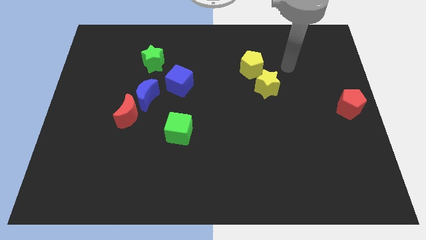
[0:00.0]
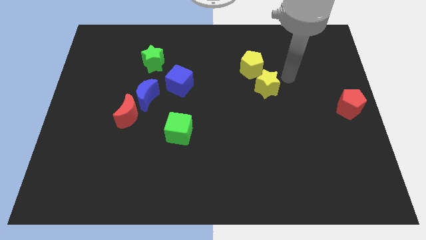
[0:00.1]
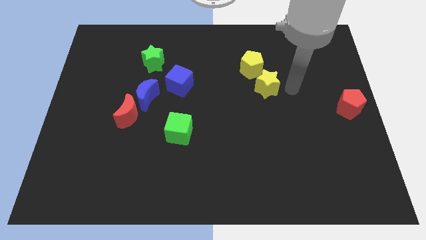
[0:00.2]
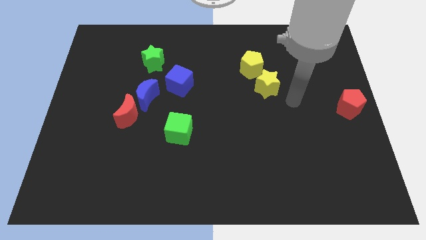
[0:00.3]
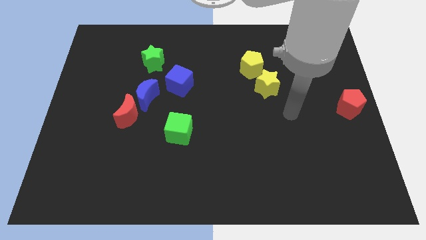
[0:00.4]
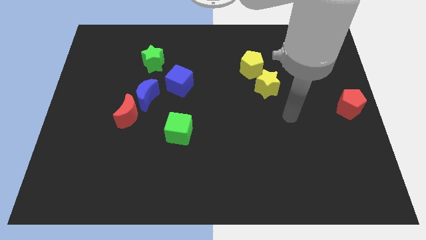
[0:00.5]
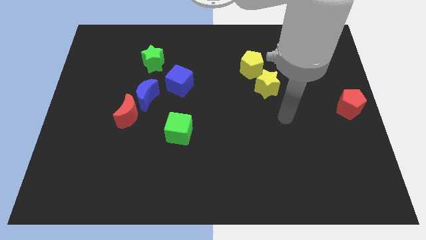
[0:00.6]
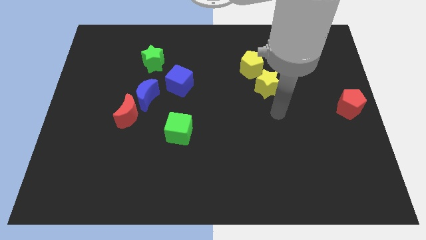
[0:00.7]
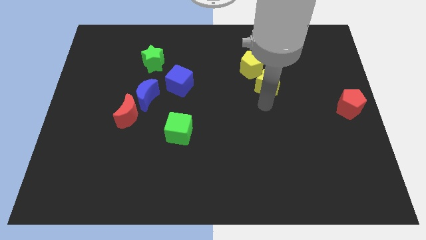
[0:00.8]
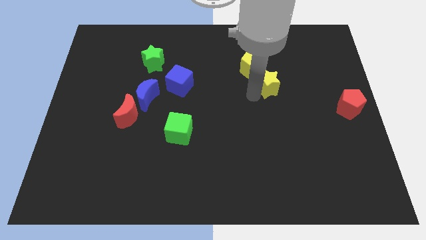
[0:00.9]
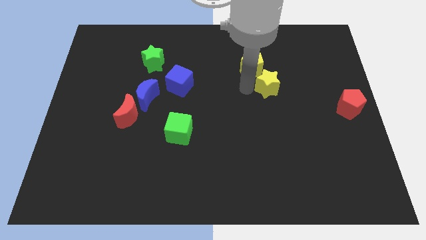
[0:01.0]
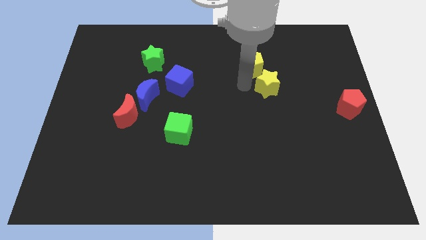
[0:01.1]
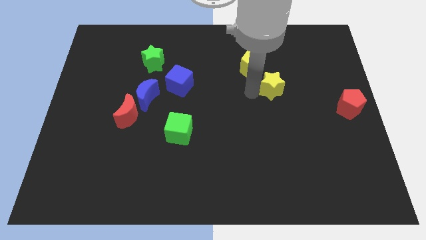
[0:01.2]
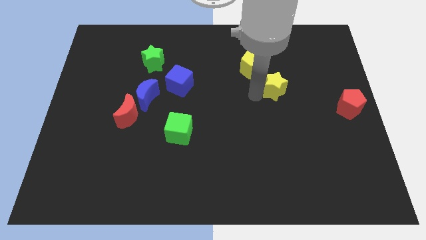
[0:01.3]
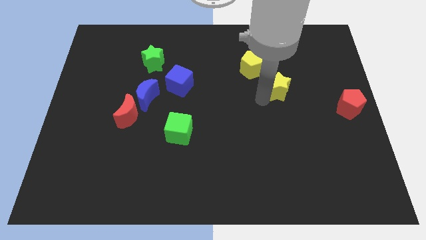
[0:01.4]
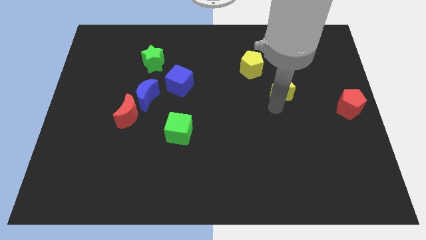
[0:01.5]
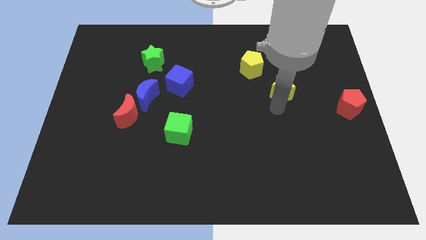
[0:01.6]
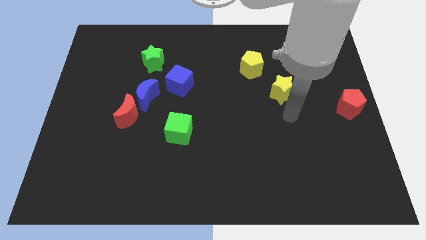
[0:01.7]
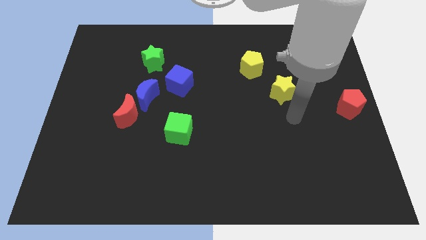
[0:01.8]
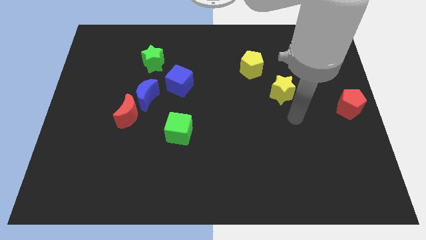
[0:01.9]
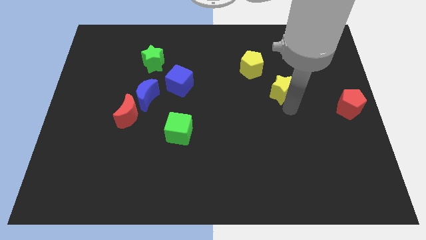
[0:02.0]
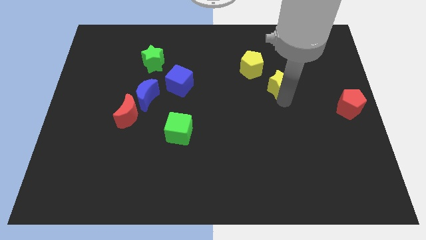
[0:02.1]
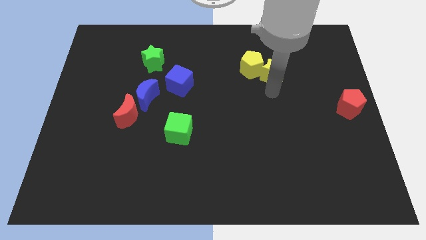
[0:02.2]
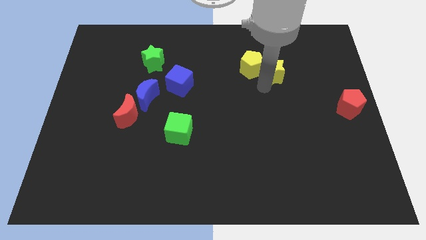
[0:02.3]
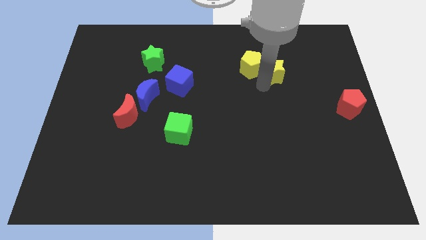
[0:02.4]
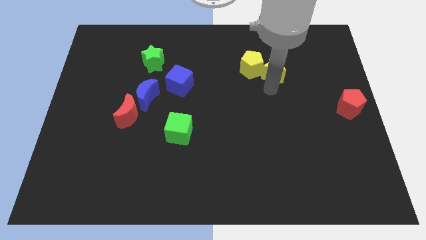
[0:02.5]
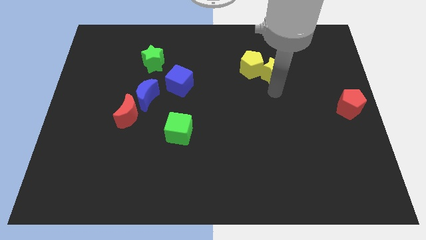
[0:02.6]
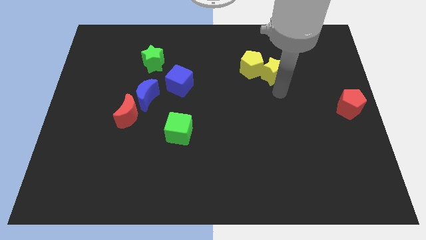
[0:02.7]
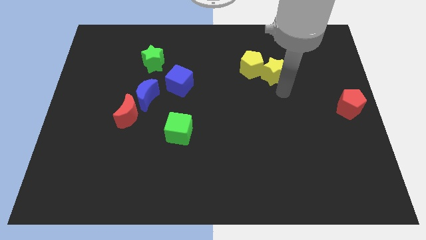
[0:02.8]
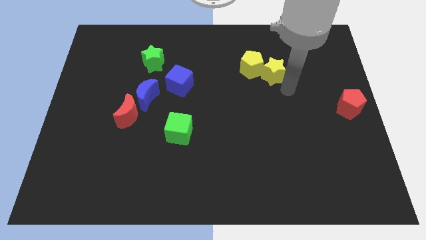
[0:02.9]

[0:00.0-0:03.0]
push the yellow star into the yellow pentagon

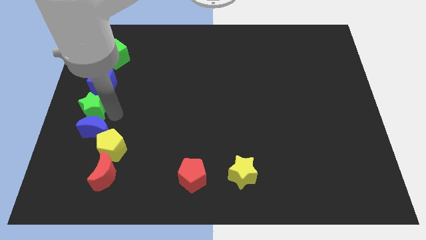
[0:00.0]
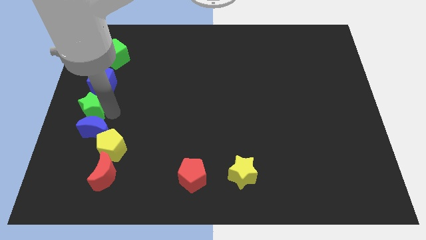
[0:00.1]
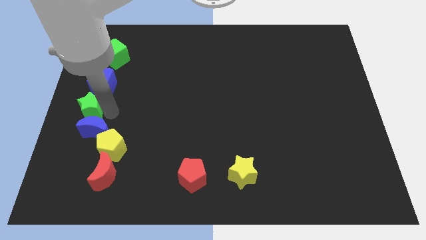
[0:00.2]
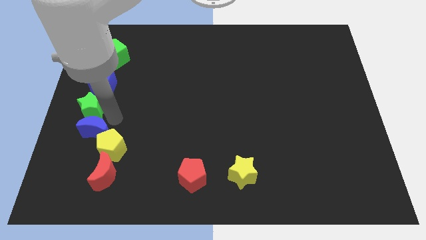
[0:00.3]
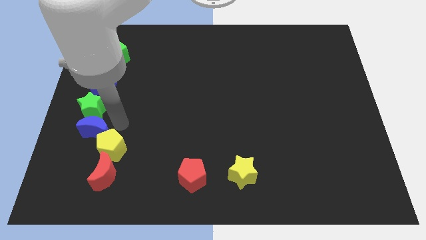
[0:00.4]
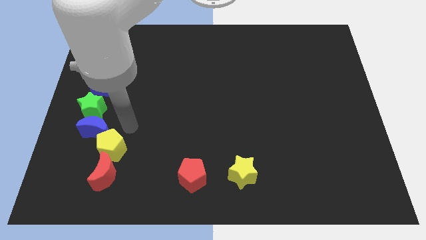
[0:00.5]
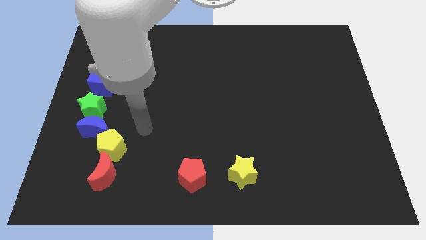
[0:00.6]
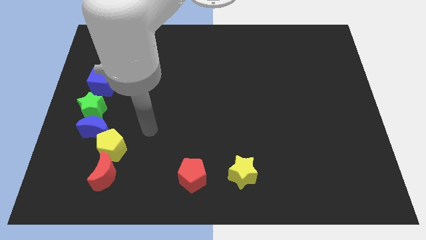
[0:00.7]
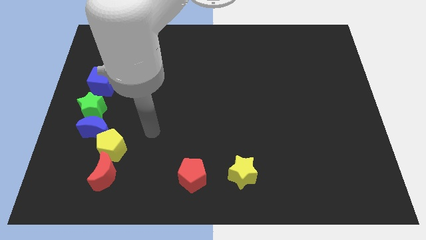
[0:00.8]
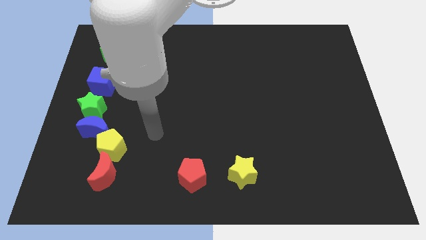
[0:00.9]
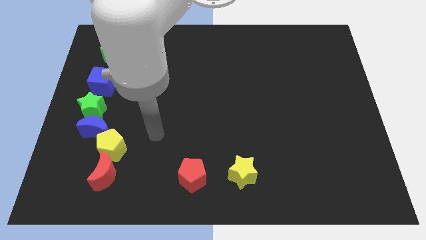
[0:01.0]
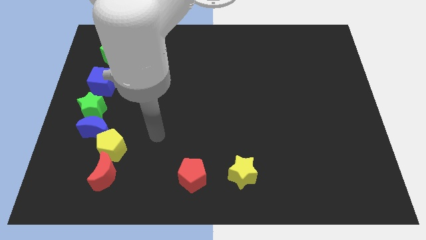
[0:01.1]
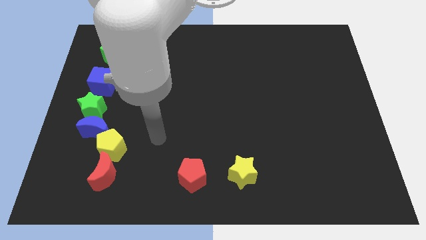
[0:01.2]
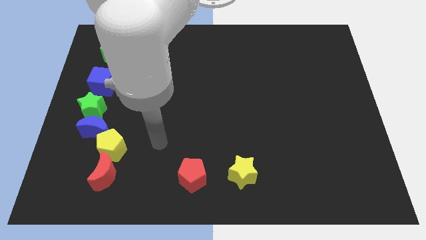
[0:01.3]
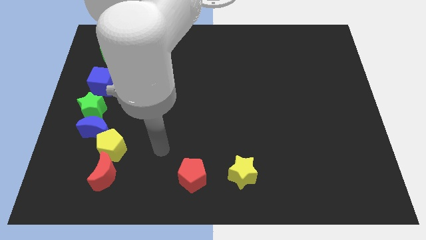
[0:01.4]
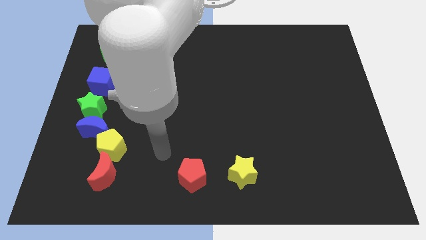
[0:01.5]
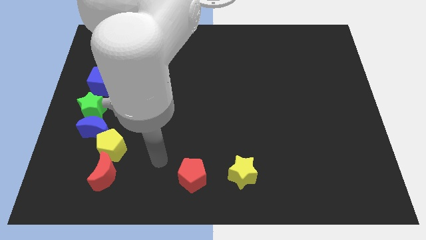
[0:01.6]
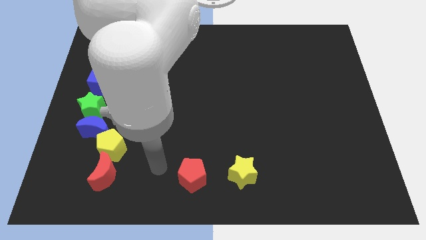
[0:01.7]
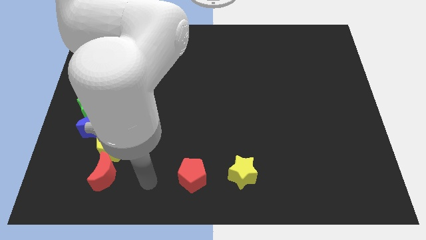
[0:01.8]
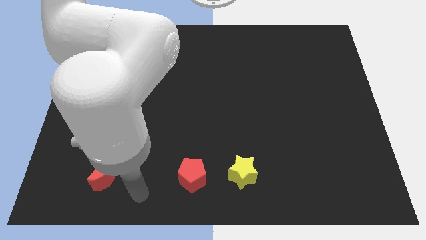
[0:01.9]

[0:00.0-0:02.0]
place your arm in between the red moon and the red pentagon

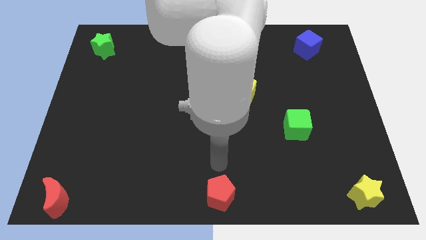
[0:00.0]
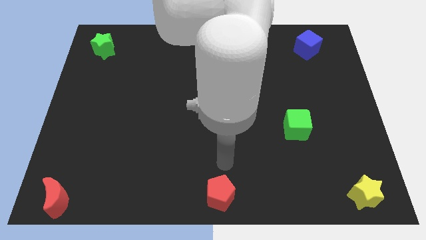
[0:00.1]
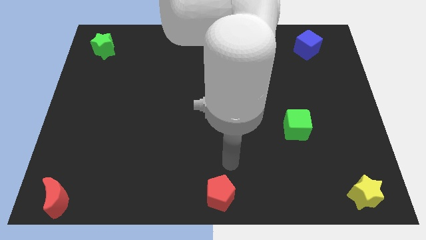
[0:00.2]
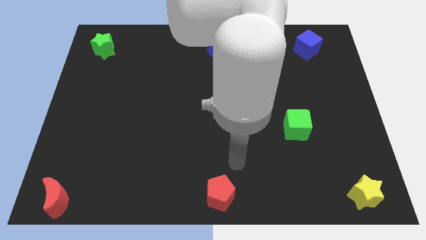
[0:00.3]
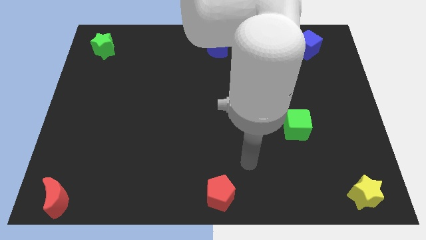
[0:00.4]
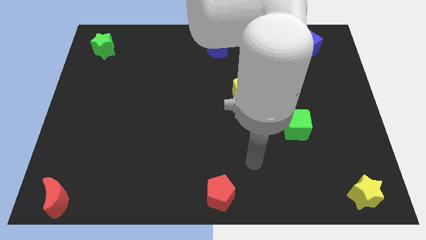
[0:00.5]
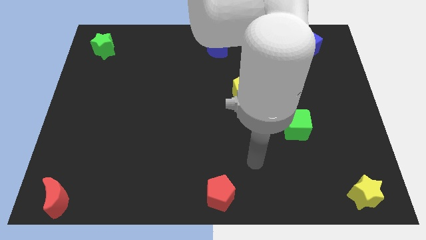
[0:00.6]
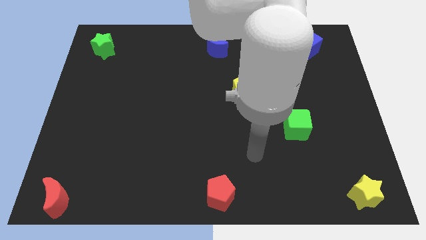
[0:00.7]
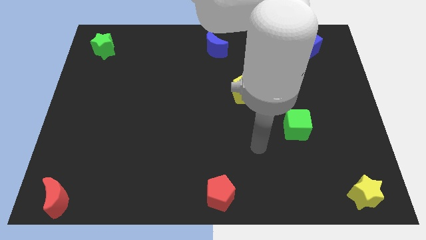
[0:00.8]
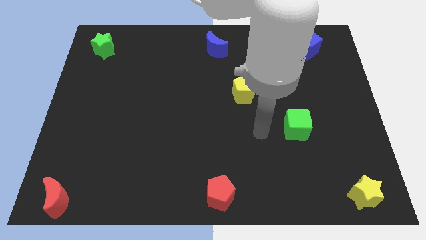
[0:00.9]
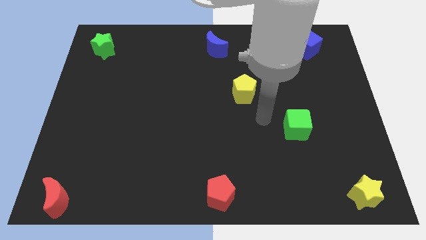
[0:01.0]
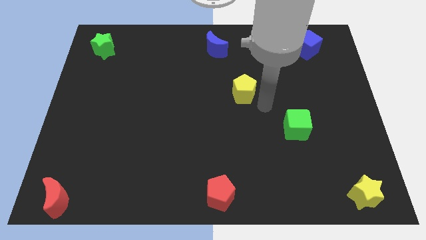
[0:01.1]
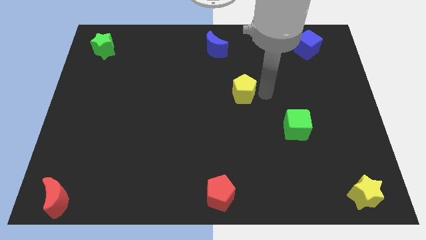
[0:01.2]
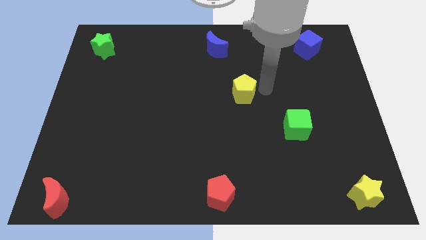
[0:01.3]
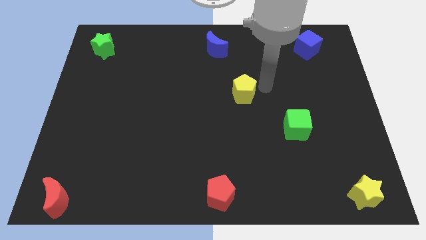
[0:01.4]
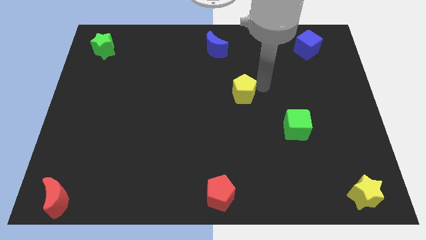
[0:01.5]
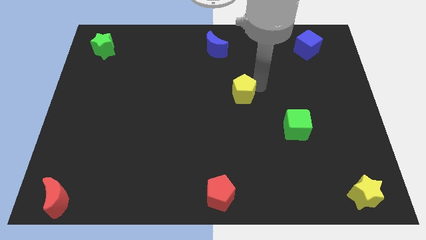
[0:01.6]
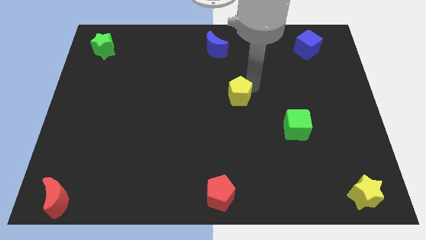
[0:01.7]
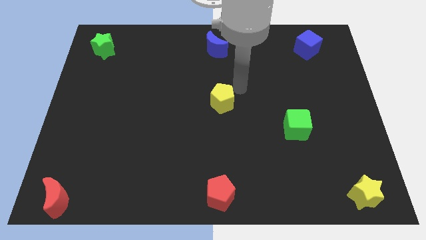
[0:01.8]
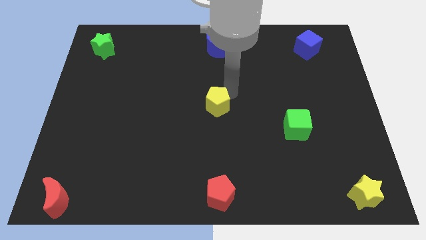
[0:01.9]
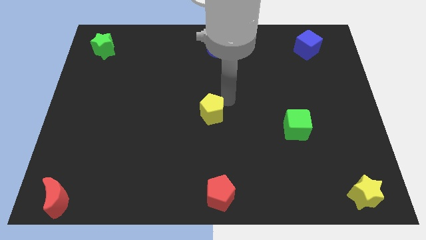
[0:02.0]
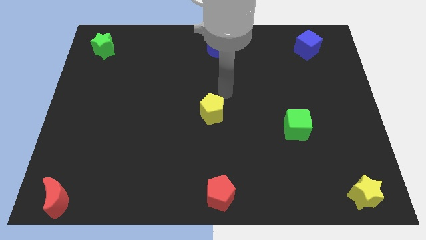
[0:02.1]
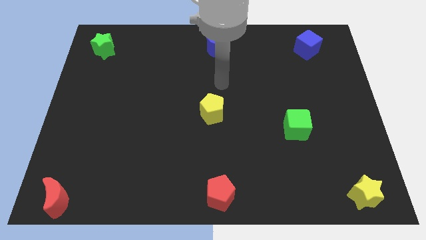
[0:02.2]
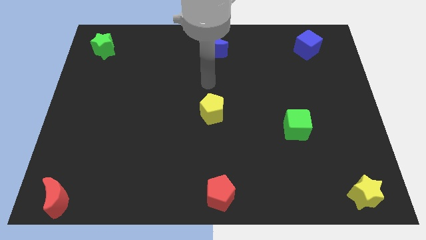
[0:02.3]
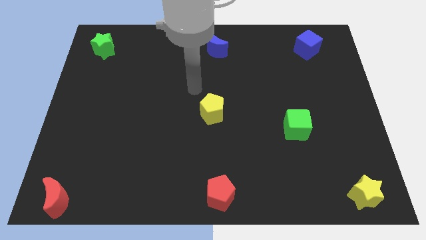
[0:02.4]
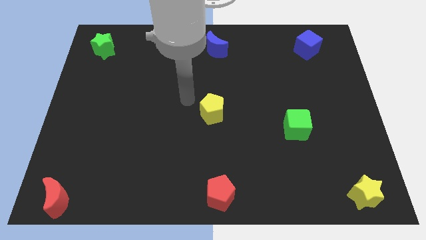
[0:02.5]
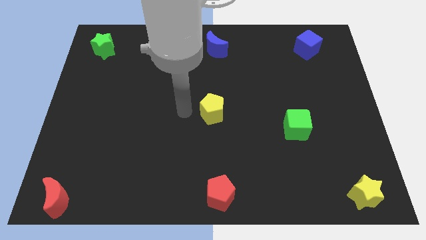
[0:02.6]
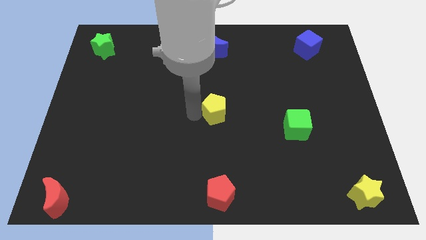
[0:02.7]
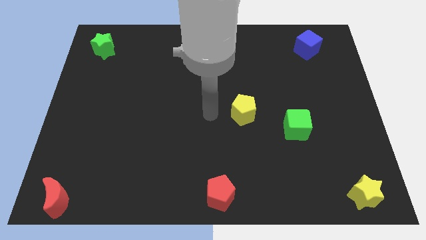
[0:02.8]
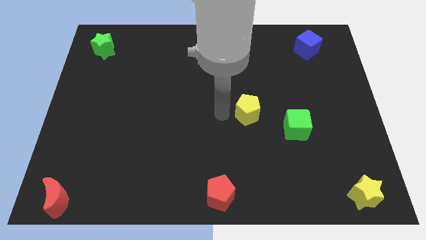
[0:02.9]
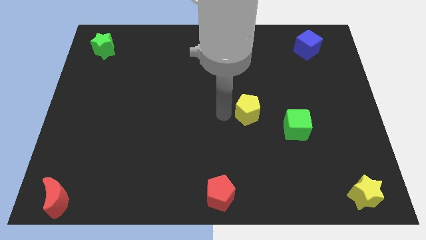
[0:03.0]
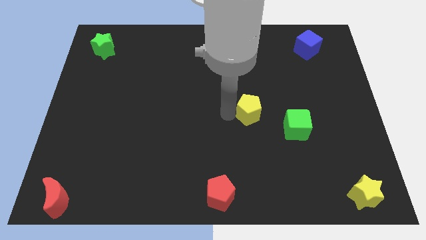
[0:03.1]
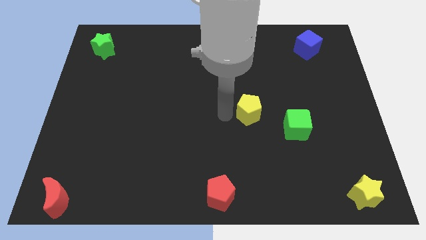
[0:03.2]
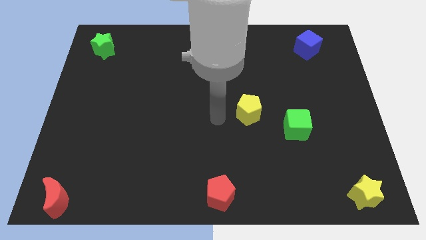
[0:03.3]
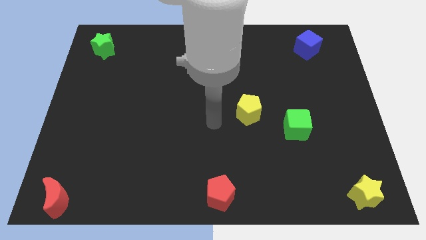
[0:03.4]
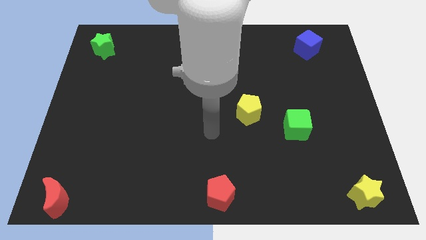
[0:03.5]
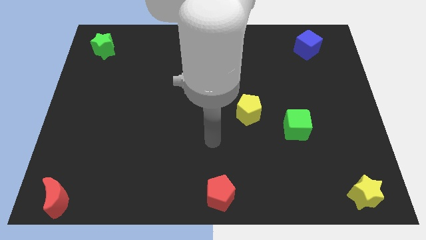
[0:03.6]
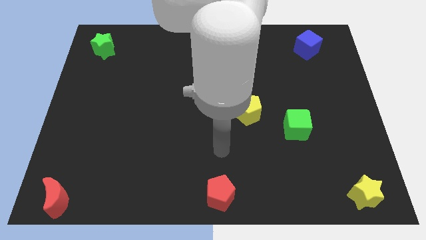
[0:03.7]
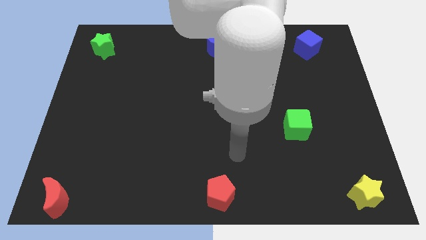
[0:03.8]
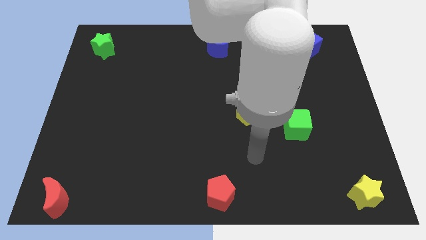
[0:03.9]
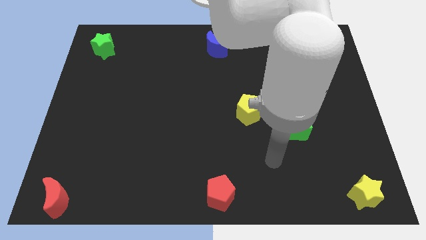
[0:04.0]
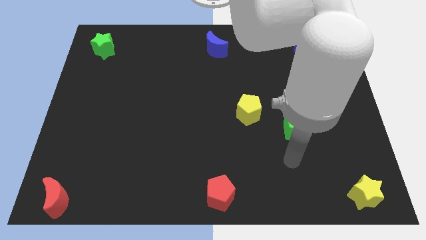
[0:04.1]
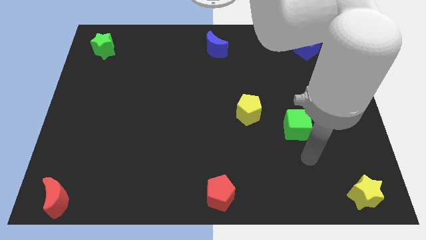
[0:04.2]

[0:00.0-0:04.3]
move the yellow pentagon to the left of the green cube
